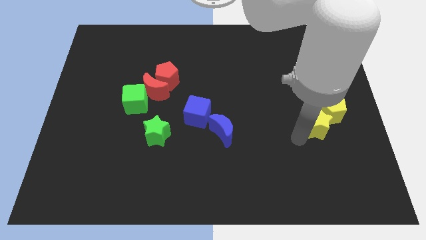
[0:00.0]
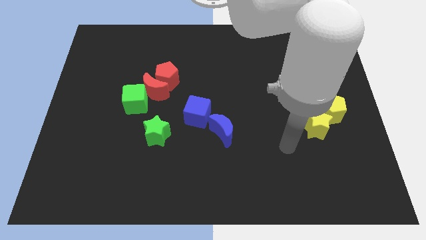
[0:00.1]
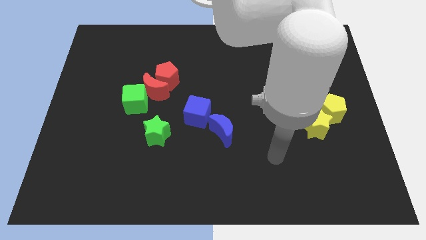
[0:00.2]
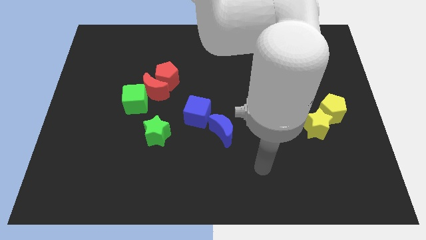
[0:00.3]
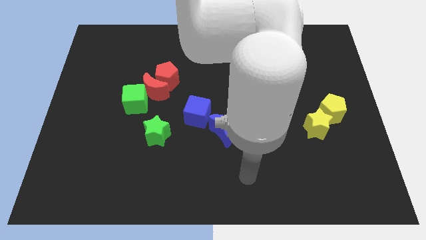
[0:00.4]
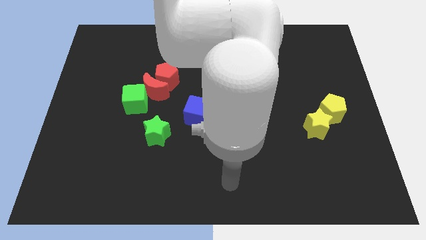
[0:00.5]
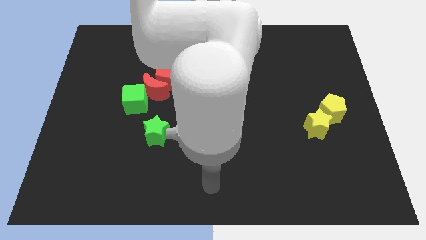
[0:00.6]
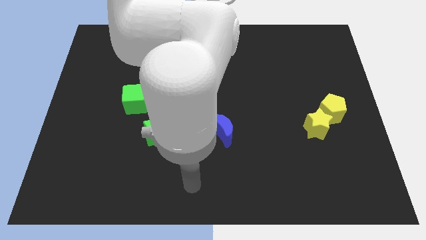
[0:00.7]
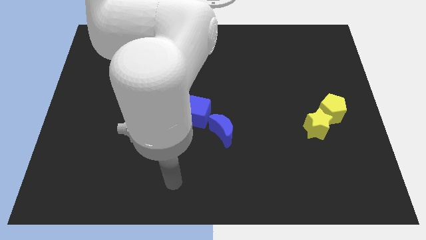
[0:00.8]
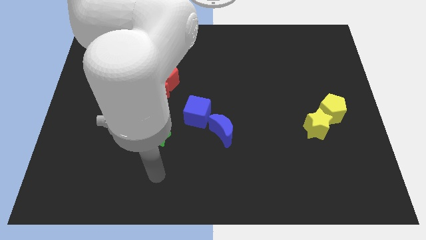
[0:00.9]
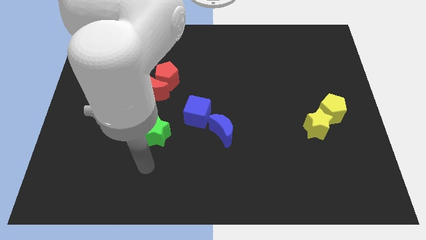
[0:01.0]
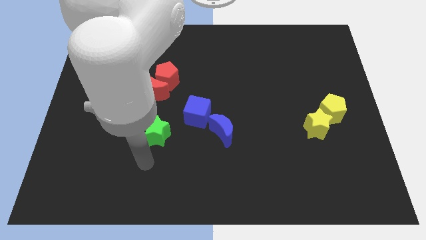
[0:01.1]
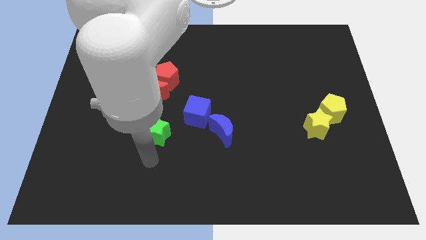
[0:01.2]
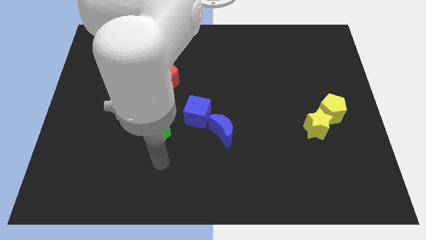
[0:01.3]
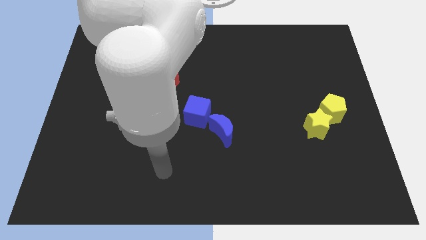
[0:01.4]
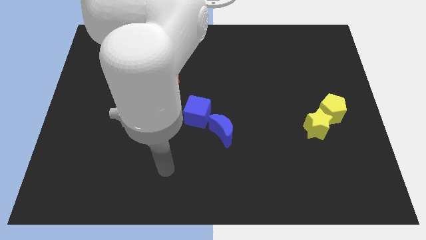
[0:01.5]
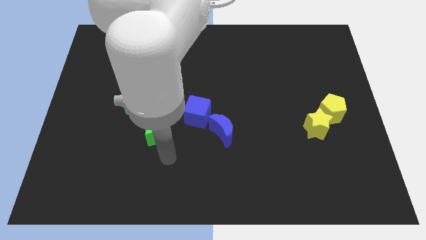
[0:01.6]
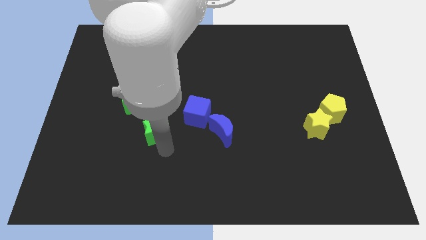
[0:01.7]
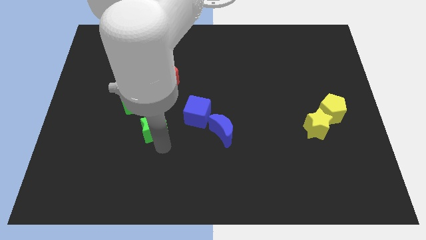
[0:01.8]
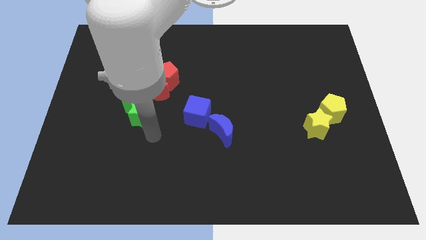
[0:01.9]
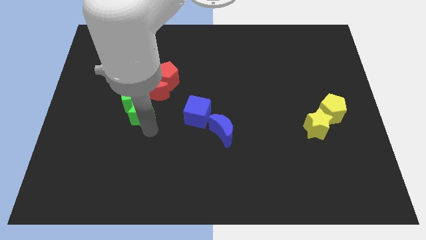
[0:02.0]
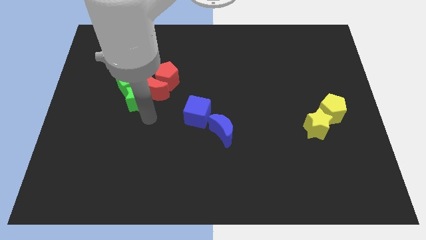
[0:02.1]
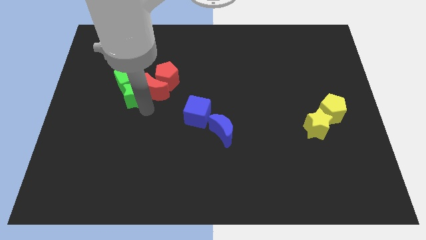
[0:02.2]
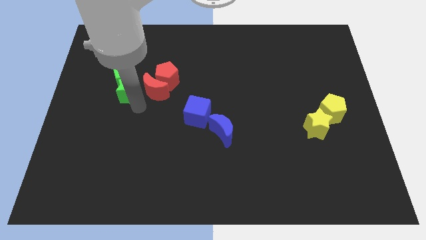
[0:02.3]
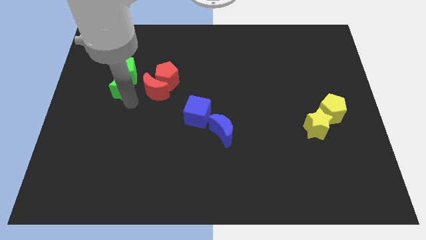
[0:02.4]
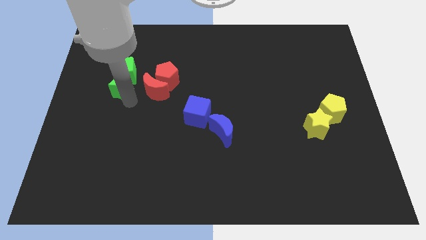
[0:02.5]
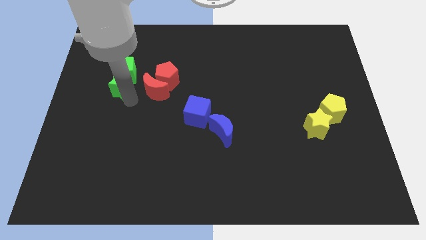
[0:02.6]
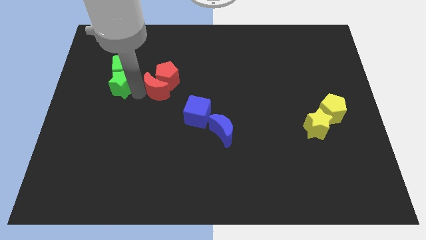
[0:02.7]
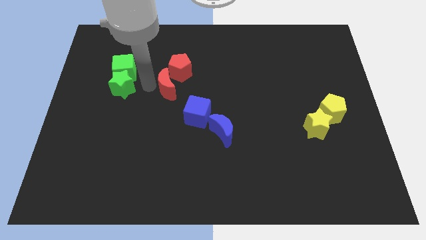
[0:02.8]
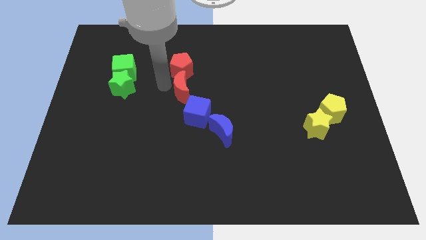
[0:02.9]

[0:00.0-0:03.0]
move the green star to the bottom of the green cube

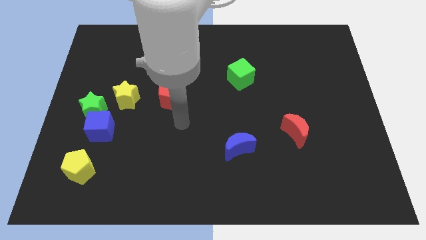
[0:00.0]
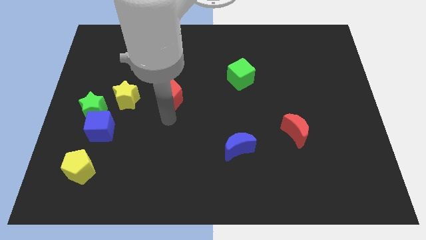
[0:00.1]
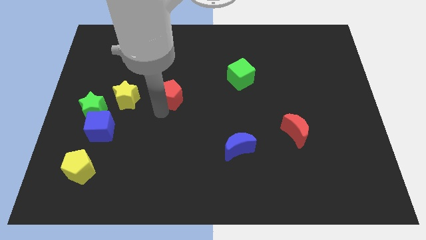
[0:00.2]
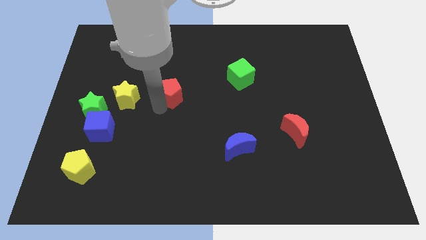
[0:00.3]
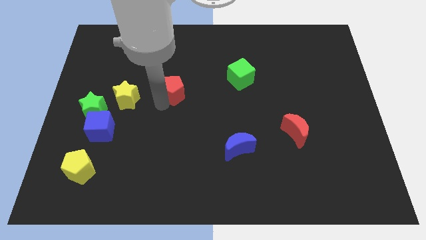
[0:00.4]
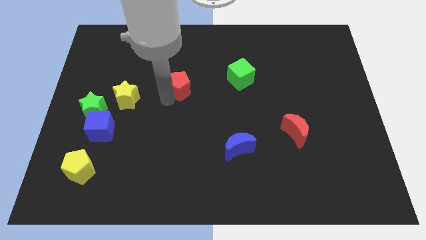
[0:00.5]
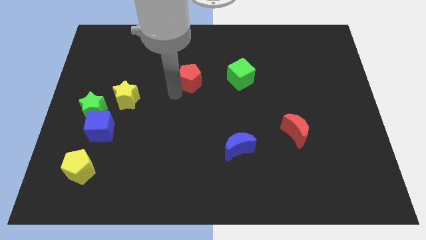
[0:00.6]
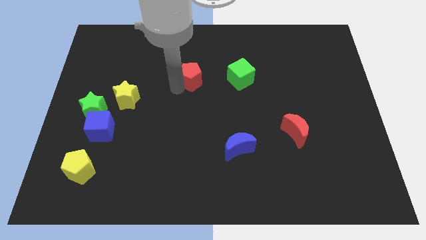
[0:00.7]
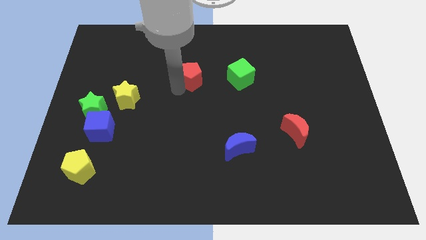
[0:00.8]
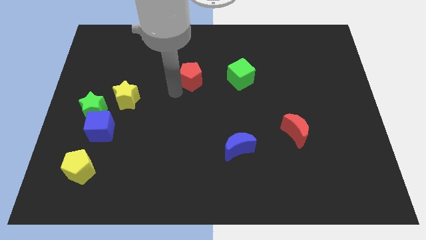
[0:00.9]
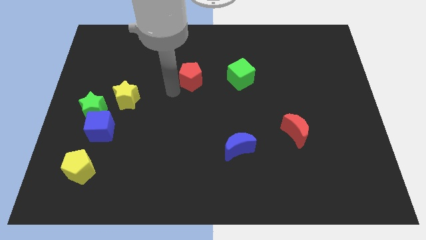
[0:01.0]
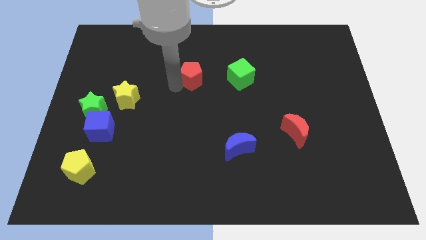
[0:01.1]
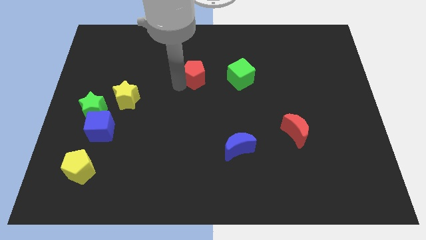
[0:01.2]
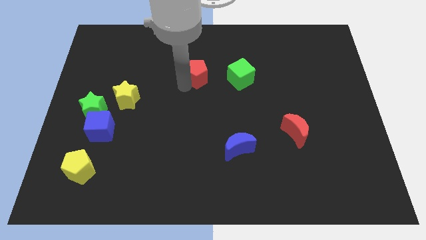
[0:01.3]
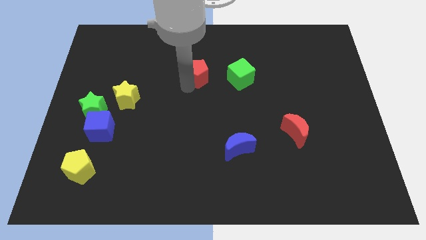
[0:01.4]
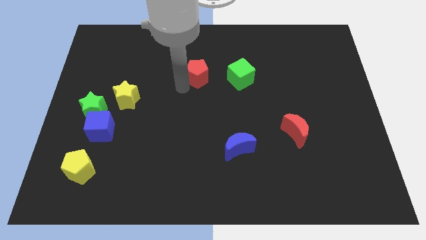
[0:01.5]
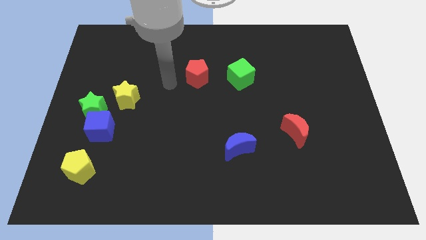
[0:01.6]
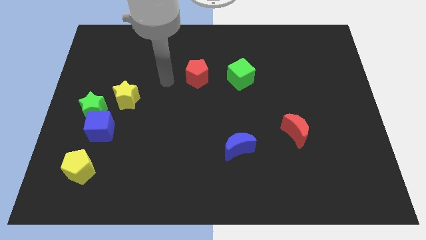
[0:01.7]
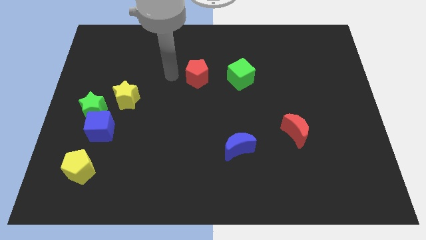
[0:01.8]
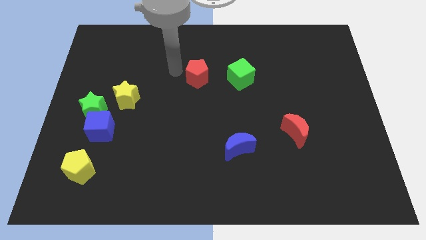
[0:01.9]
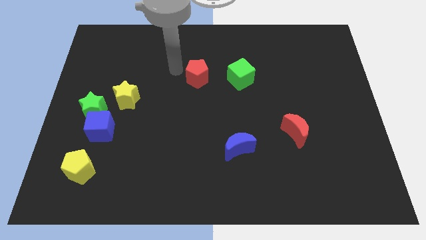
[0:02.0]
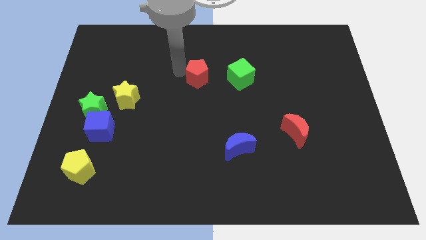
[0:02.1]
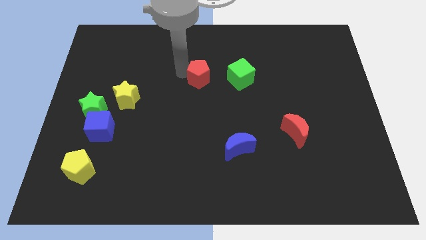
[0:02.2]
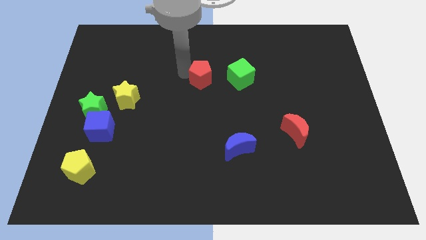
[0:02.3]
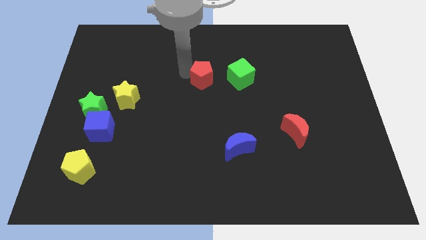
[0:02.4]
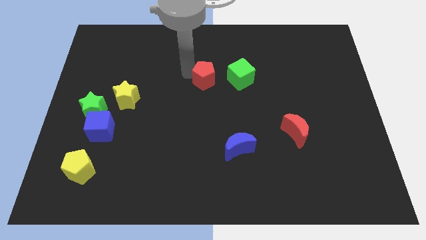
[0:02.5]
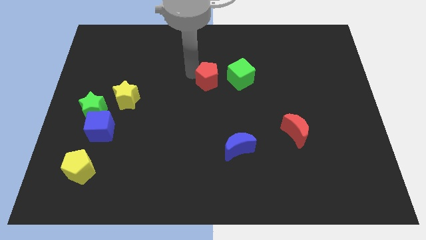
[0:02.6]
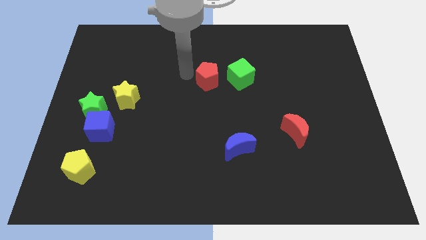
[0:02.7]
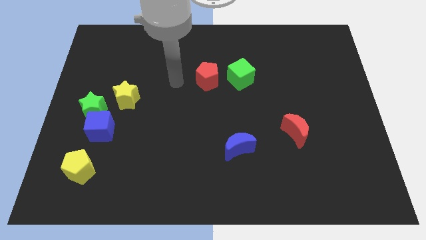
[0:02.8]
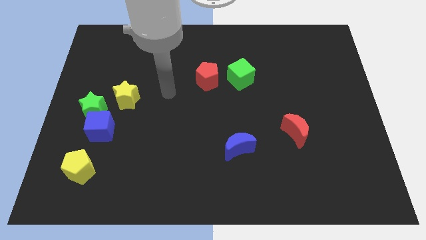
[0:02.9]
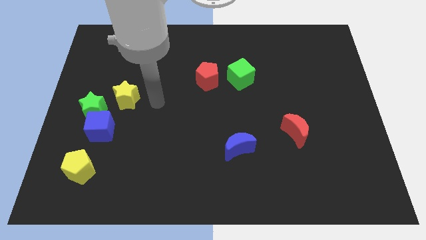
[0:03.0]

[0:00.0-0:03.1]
move the red pentagon to the left of green cube

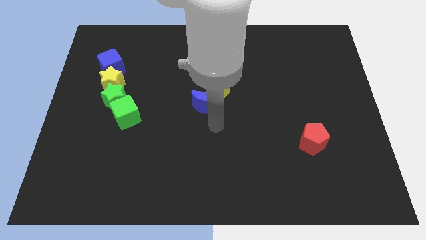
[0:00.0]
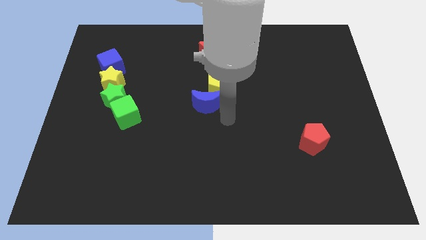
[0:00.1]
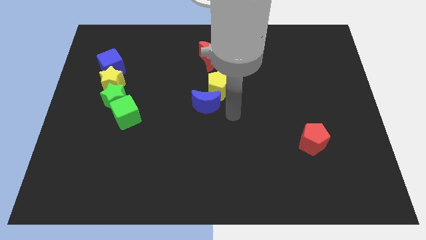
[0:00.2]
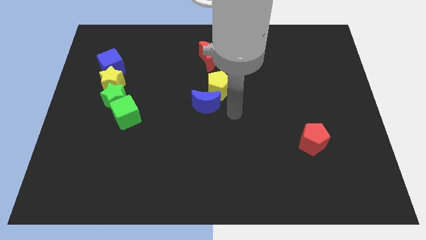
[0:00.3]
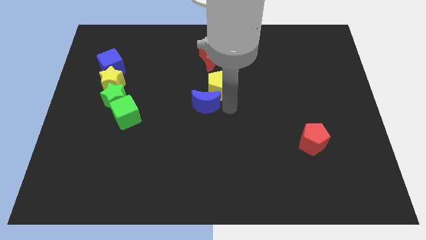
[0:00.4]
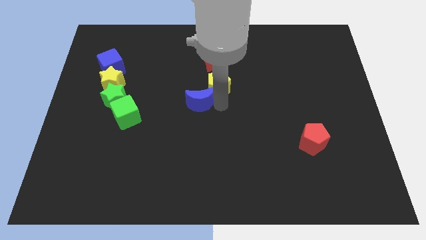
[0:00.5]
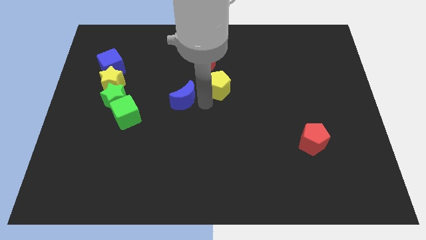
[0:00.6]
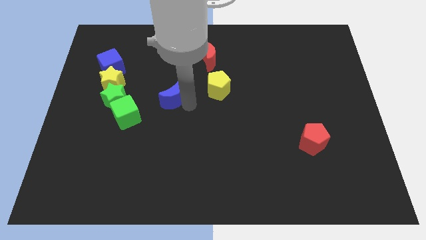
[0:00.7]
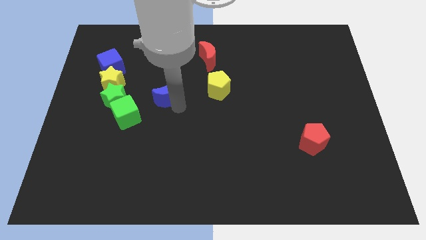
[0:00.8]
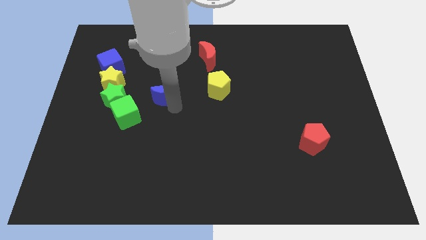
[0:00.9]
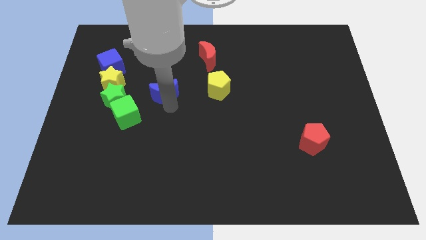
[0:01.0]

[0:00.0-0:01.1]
place the blue moon in between the yellow pentagon and green star

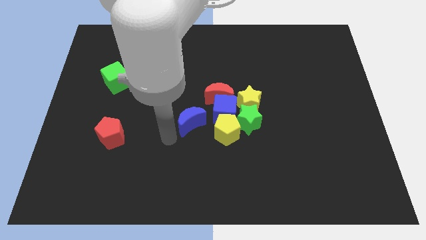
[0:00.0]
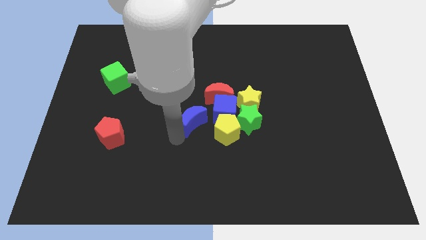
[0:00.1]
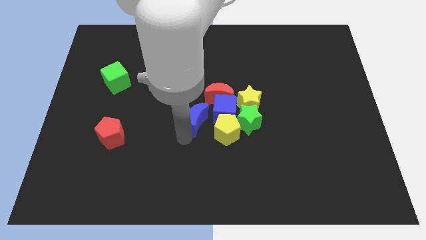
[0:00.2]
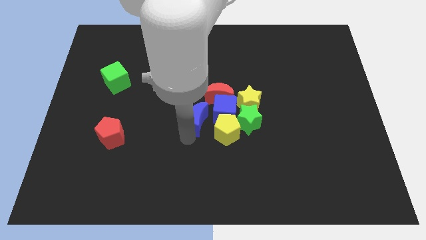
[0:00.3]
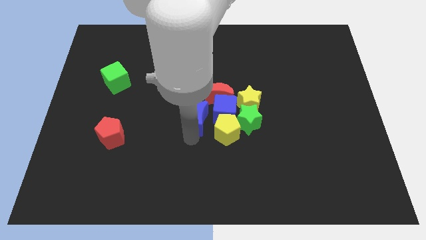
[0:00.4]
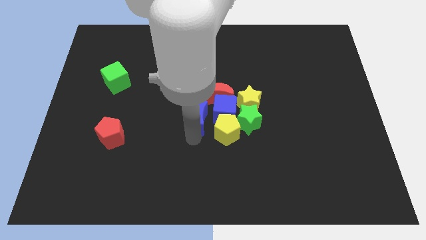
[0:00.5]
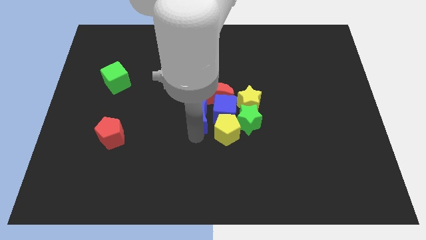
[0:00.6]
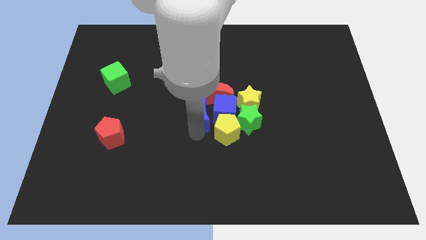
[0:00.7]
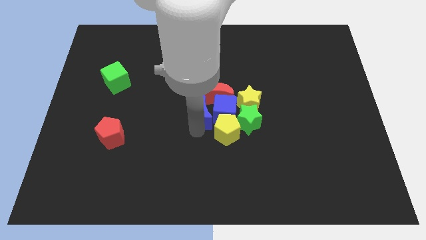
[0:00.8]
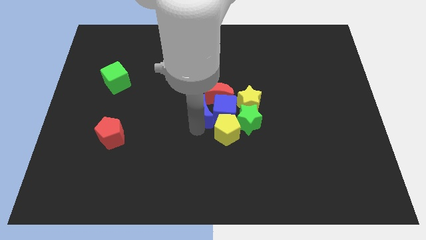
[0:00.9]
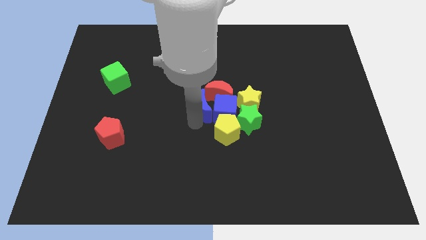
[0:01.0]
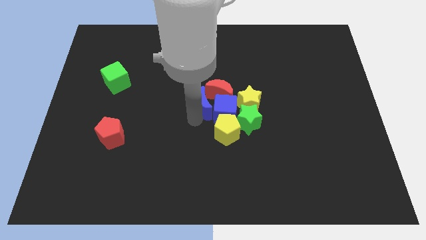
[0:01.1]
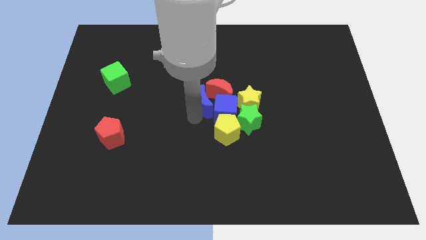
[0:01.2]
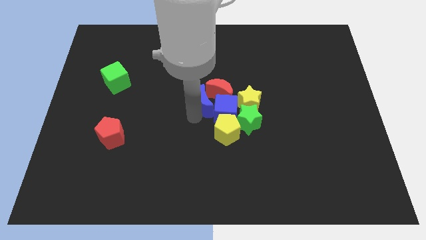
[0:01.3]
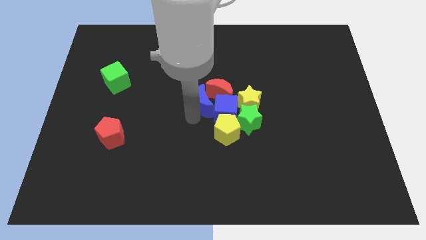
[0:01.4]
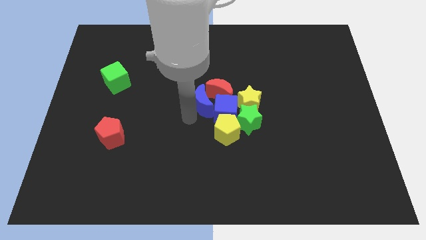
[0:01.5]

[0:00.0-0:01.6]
push blue crescent to the center of the board
